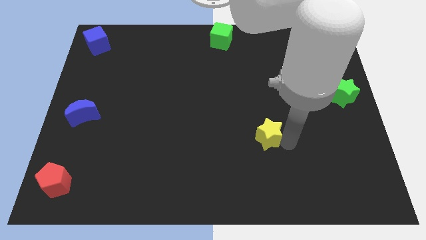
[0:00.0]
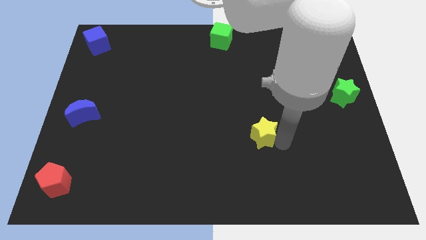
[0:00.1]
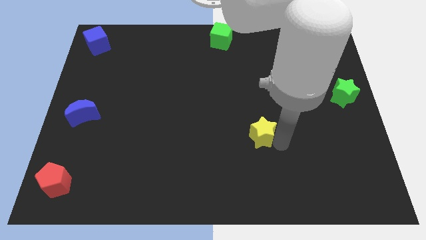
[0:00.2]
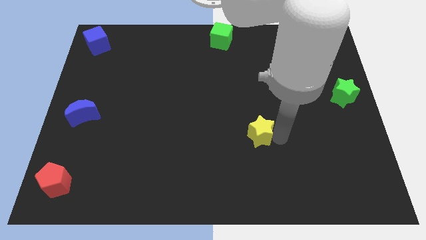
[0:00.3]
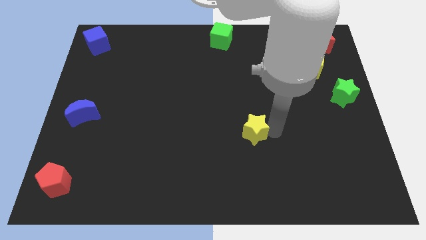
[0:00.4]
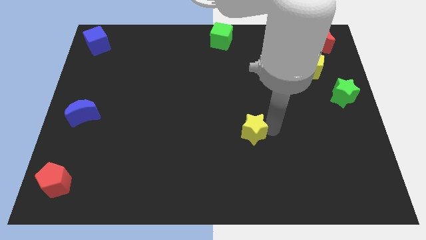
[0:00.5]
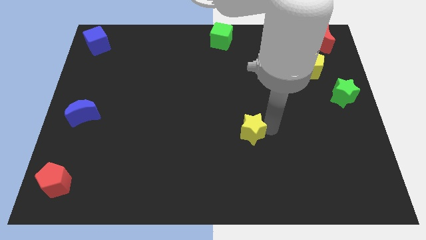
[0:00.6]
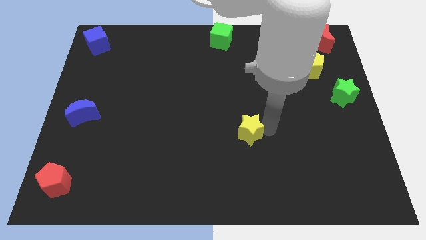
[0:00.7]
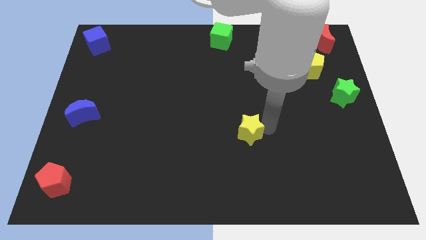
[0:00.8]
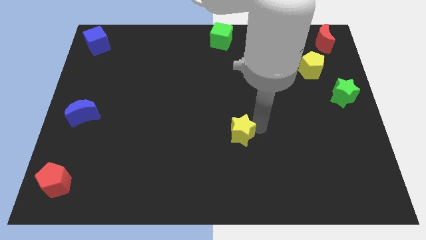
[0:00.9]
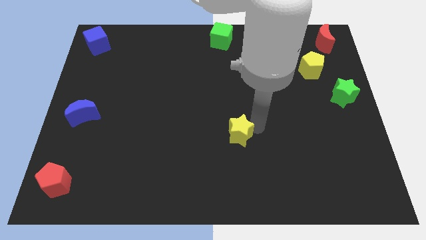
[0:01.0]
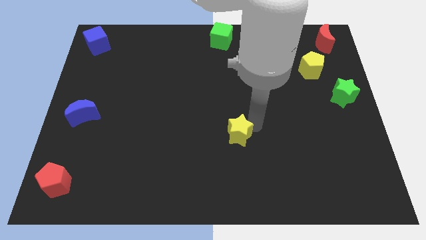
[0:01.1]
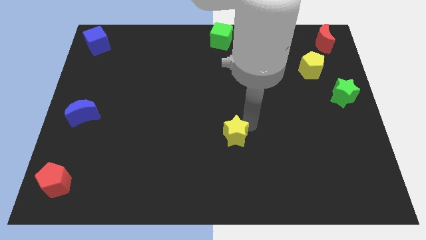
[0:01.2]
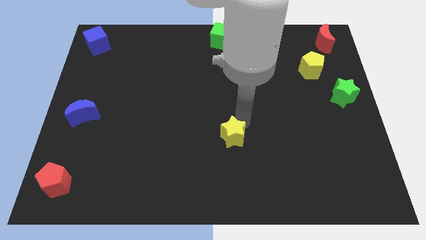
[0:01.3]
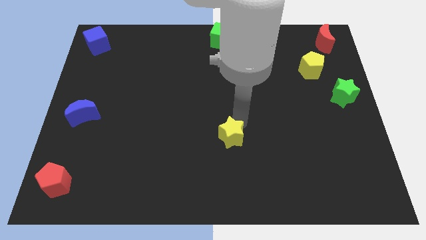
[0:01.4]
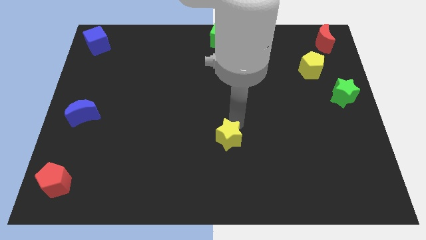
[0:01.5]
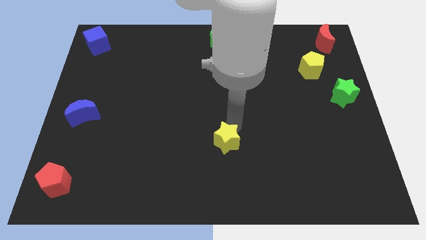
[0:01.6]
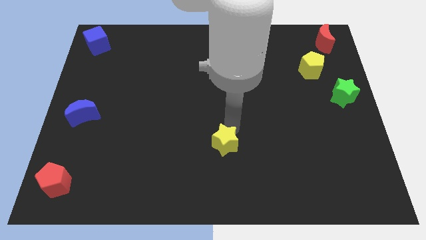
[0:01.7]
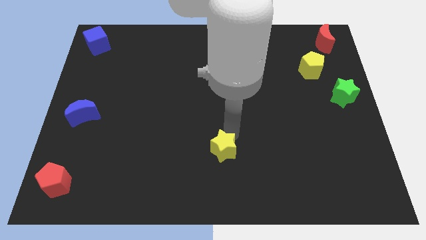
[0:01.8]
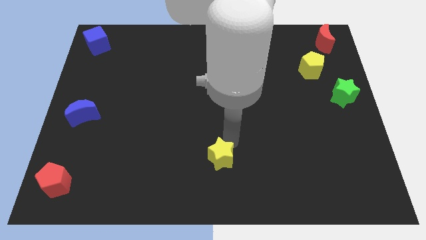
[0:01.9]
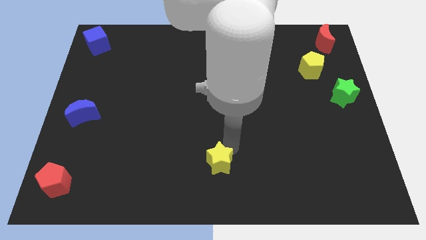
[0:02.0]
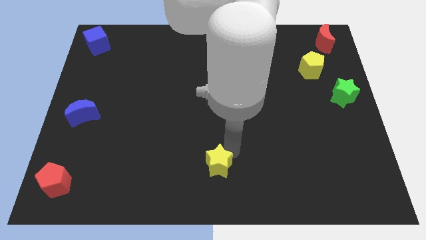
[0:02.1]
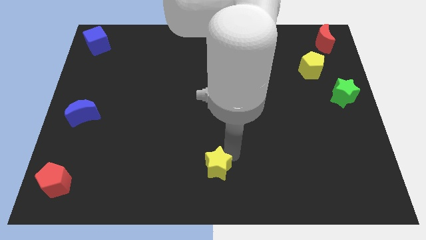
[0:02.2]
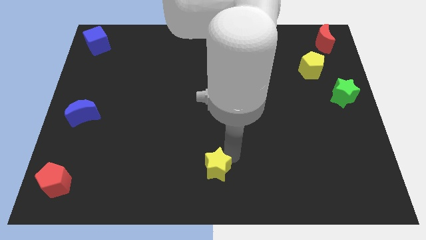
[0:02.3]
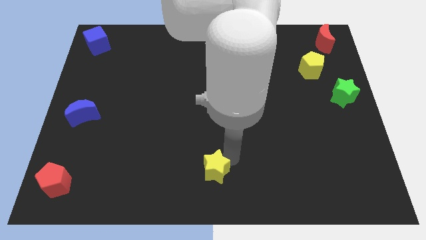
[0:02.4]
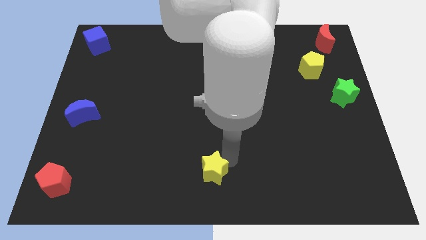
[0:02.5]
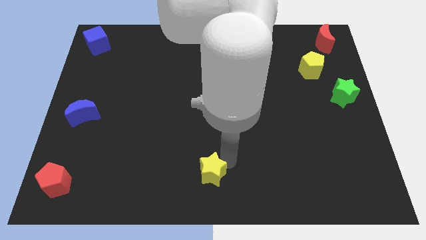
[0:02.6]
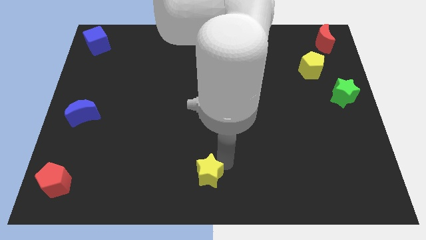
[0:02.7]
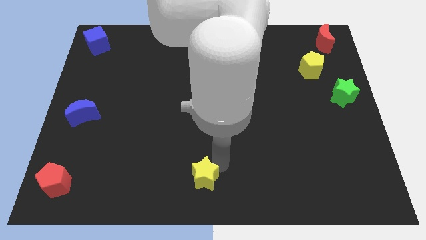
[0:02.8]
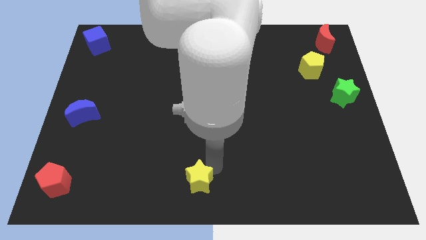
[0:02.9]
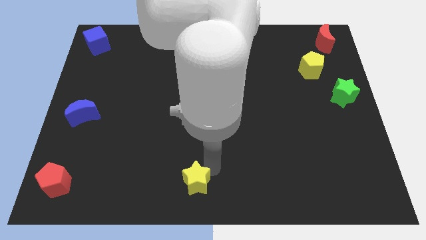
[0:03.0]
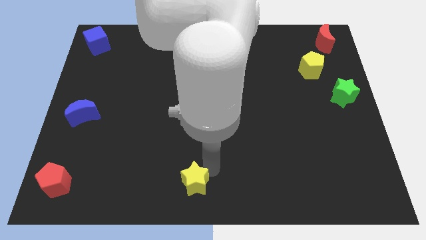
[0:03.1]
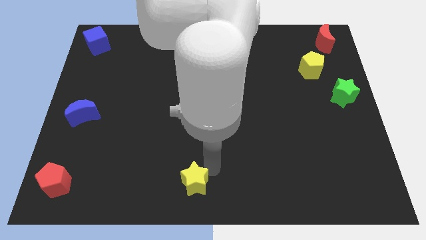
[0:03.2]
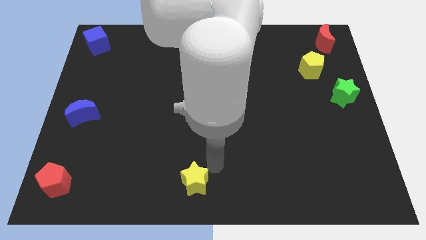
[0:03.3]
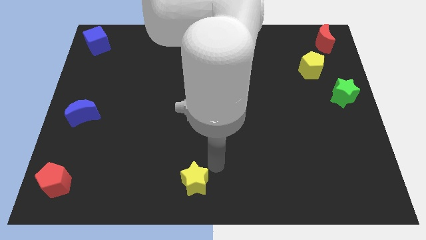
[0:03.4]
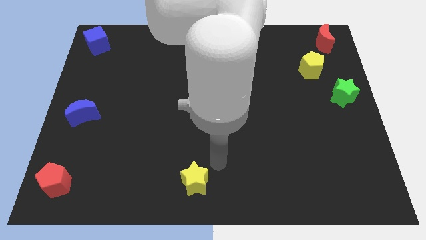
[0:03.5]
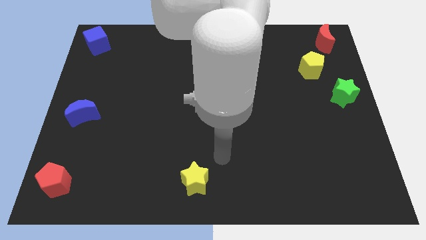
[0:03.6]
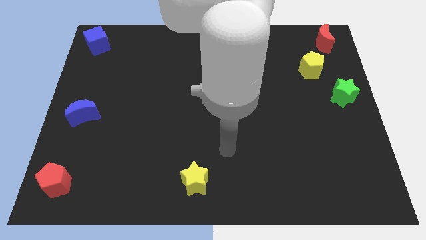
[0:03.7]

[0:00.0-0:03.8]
put the yellow star to the right of the red pentagon

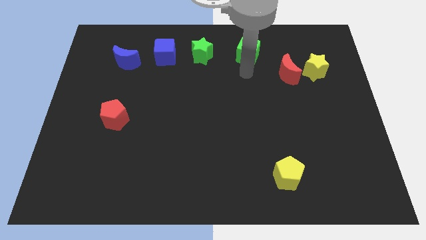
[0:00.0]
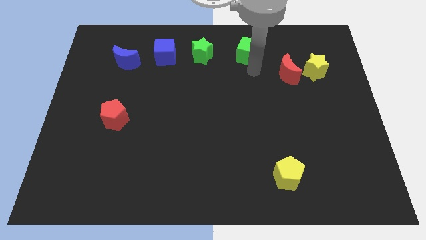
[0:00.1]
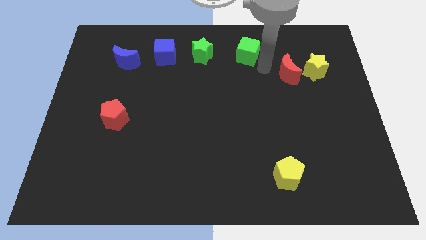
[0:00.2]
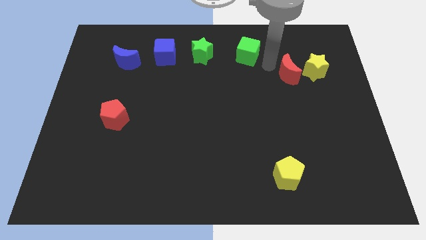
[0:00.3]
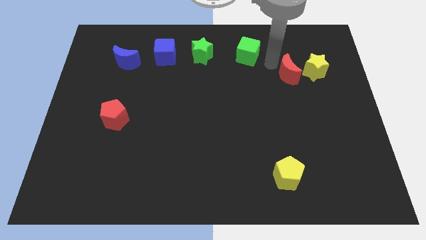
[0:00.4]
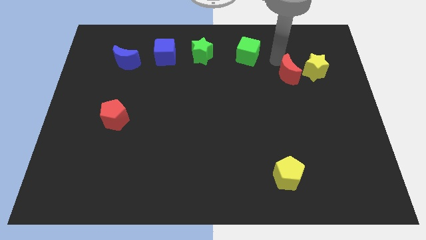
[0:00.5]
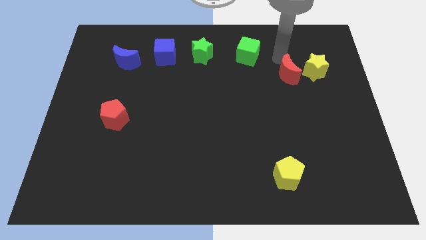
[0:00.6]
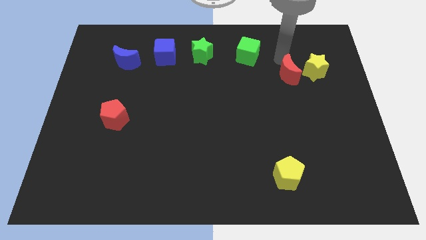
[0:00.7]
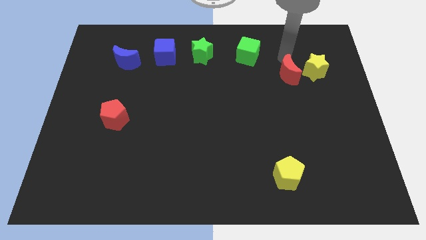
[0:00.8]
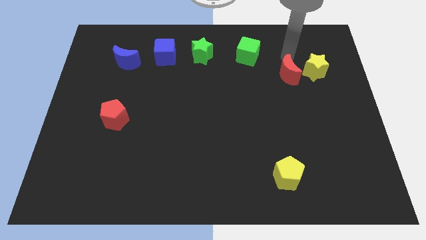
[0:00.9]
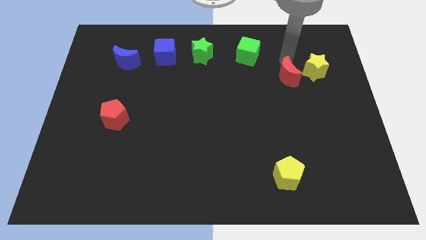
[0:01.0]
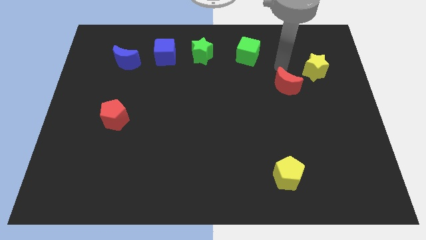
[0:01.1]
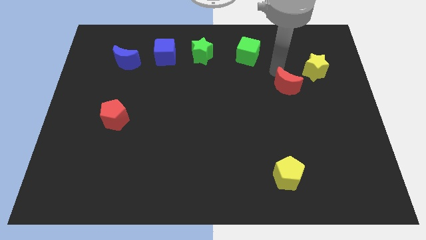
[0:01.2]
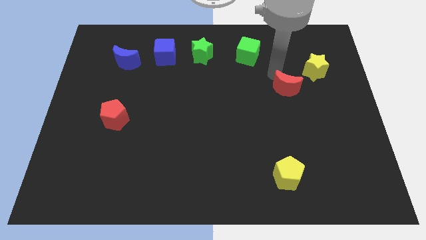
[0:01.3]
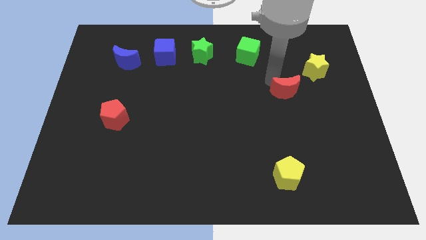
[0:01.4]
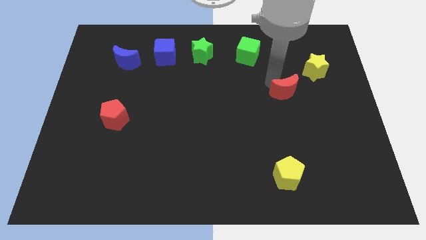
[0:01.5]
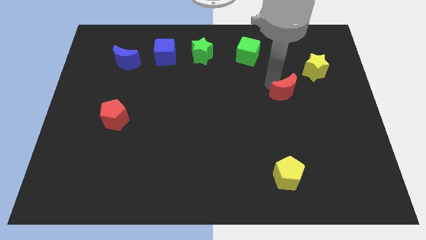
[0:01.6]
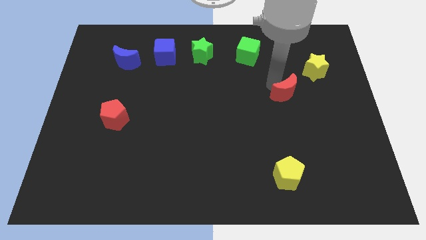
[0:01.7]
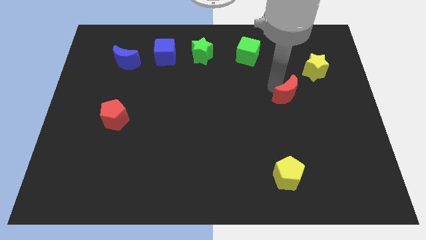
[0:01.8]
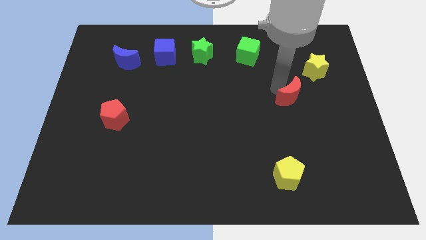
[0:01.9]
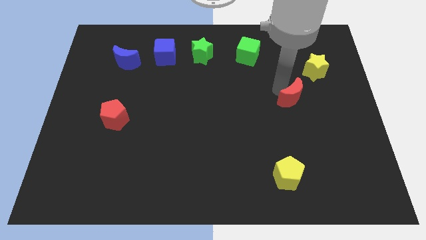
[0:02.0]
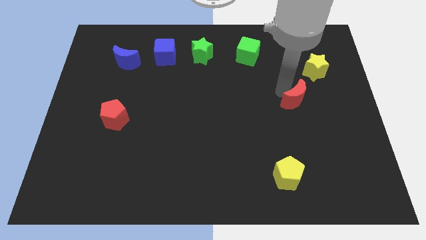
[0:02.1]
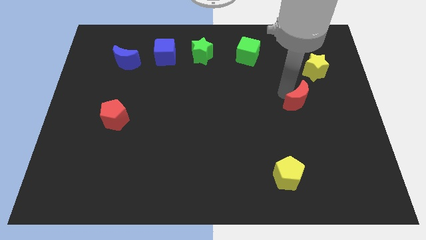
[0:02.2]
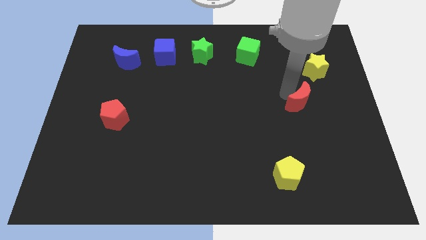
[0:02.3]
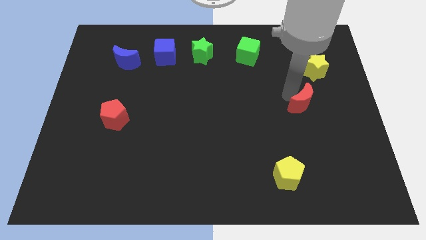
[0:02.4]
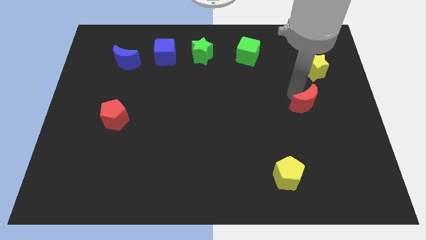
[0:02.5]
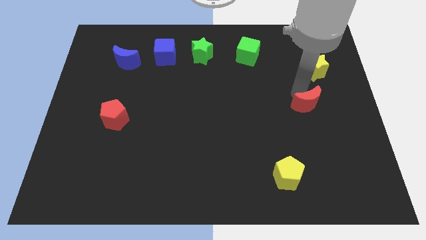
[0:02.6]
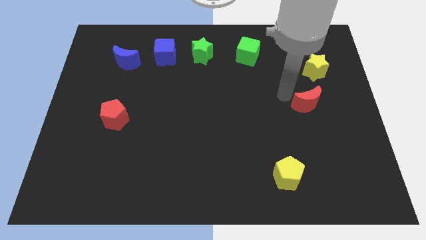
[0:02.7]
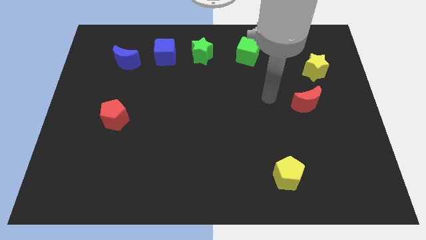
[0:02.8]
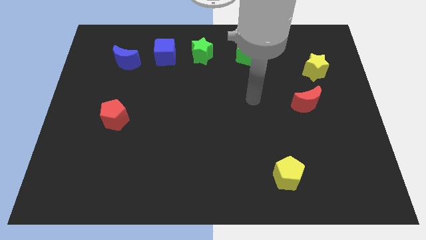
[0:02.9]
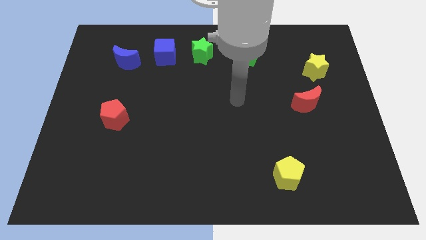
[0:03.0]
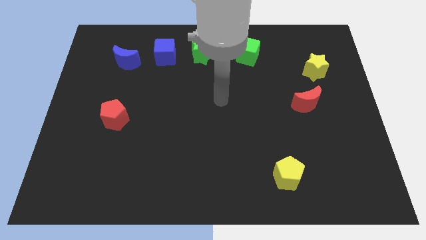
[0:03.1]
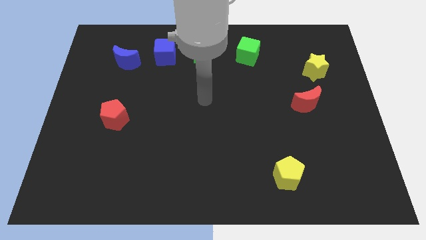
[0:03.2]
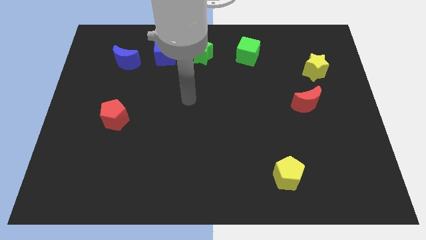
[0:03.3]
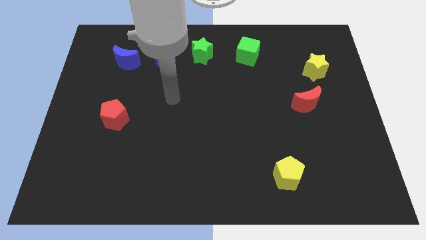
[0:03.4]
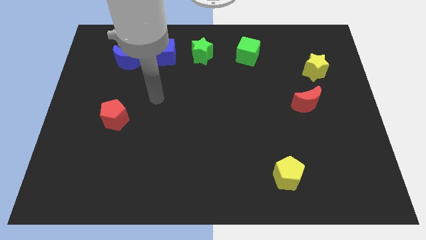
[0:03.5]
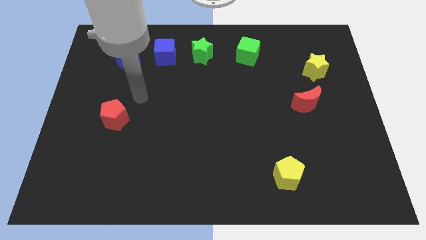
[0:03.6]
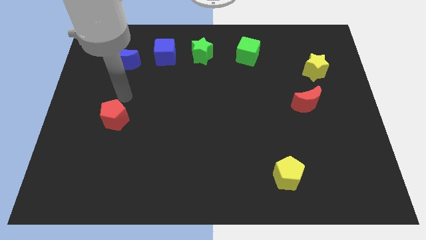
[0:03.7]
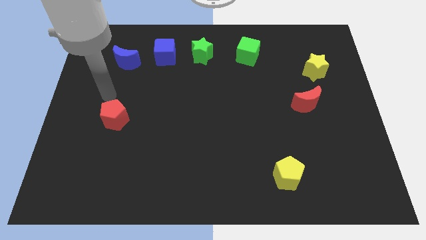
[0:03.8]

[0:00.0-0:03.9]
place red crescent to the bottom of yellow star

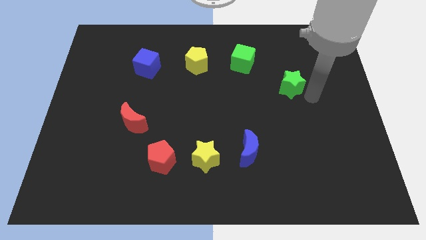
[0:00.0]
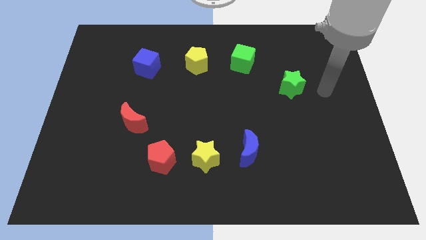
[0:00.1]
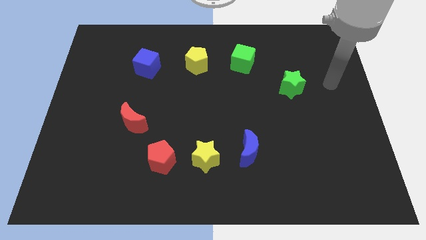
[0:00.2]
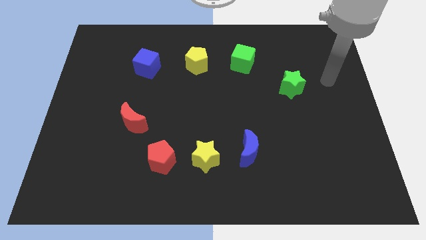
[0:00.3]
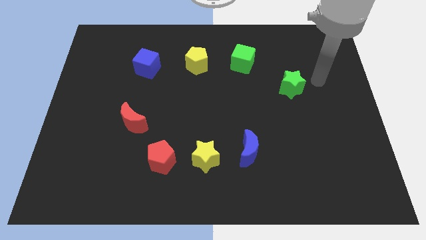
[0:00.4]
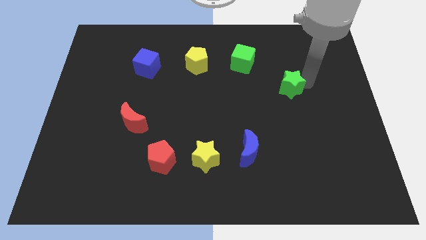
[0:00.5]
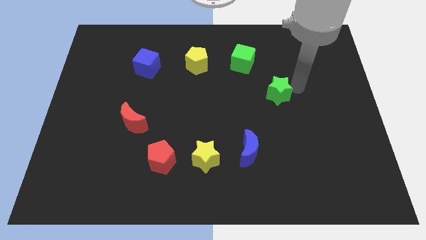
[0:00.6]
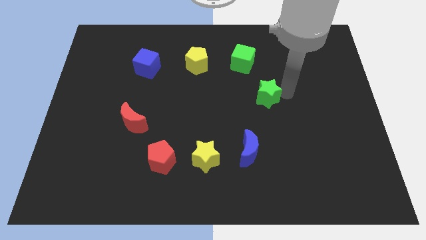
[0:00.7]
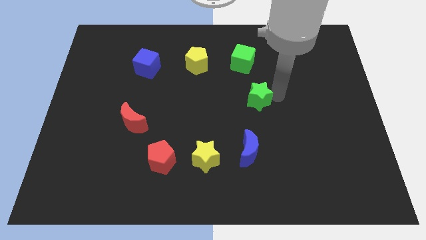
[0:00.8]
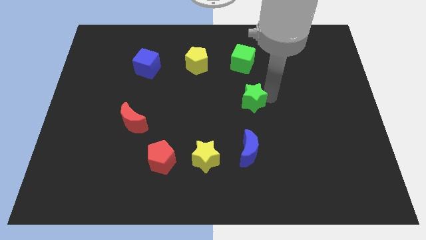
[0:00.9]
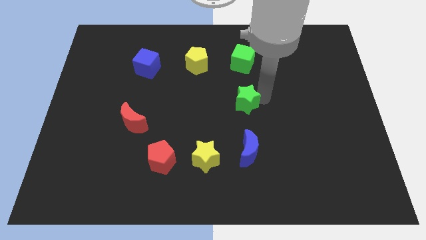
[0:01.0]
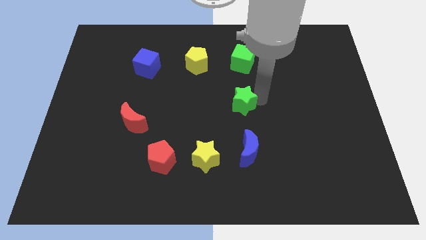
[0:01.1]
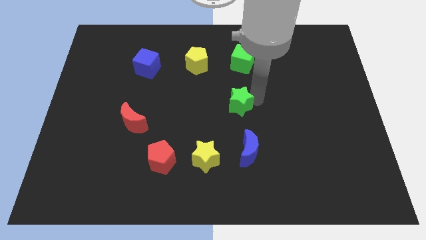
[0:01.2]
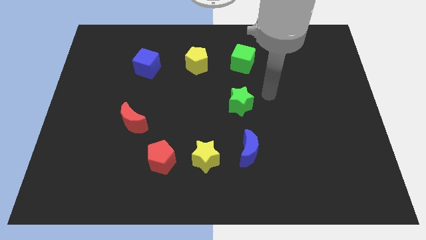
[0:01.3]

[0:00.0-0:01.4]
put the green star in between blue crescent and green cube

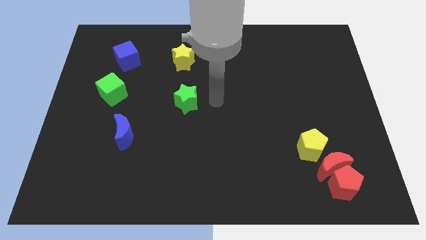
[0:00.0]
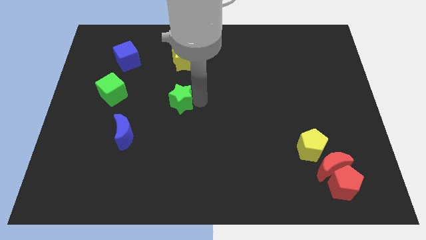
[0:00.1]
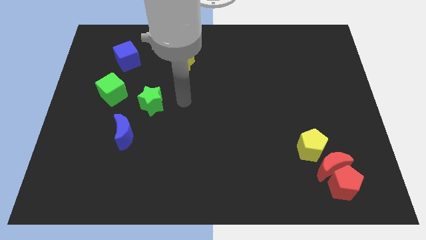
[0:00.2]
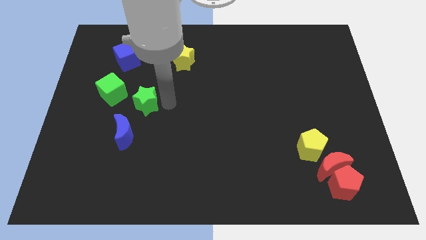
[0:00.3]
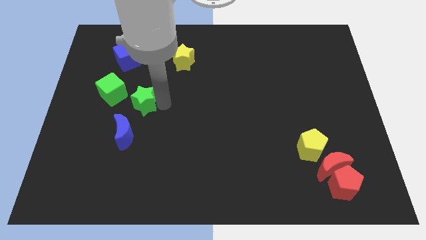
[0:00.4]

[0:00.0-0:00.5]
move the green star close to the green cube
